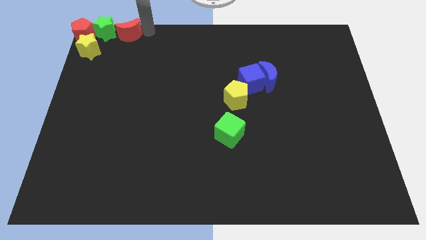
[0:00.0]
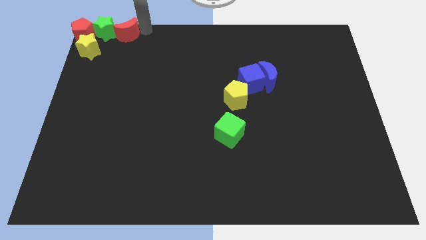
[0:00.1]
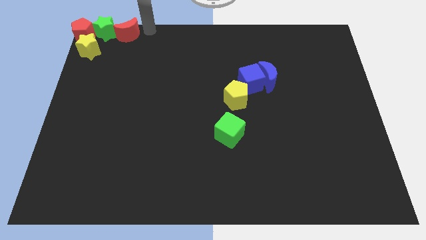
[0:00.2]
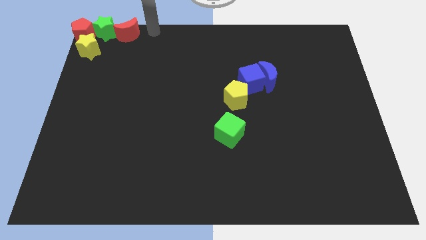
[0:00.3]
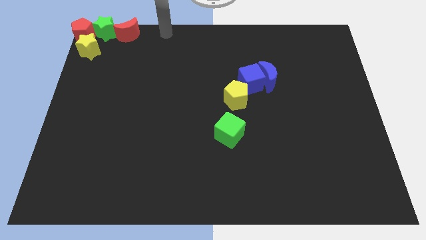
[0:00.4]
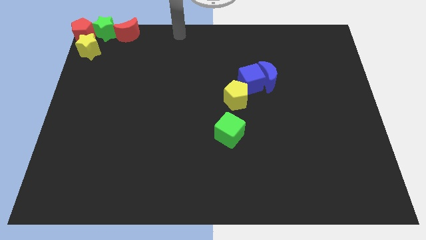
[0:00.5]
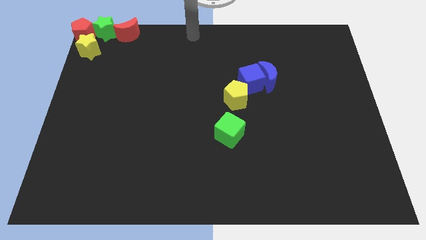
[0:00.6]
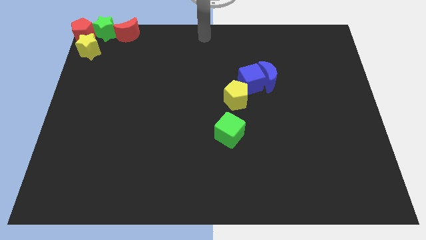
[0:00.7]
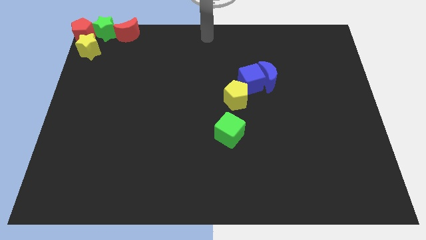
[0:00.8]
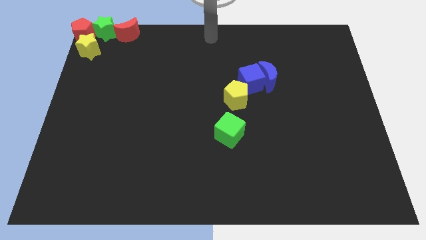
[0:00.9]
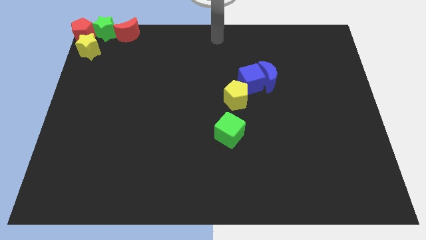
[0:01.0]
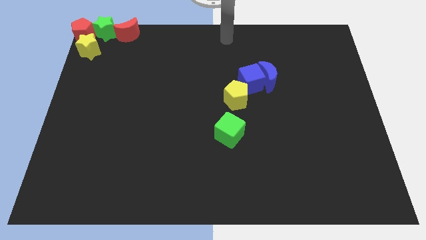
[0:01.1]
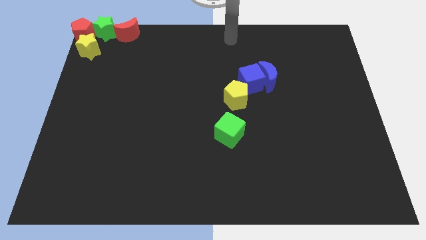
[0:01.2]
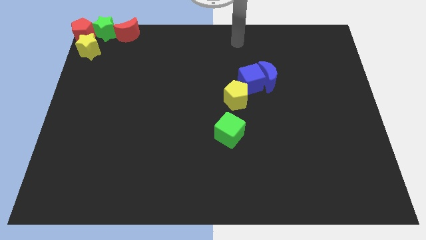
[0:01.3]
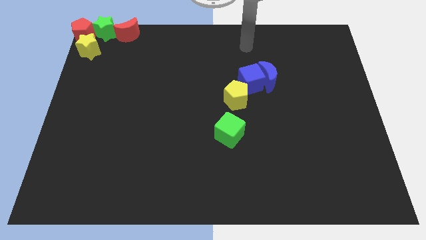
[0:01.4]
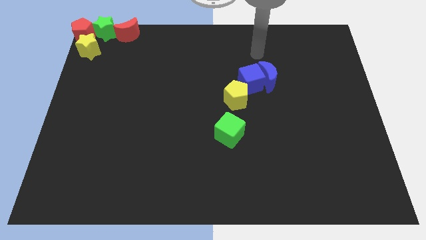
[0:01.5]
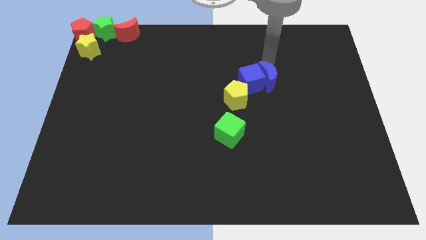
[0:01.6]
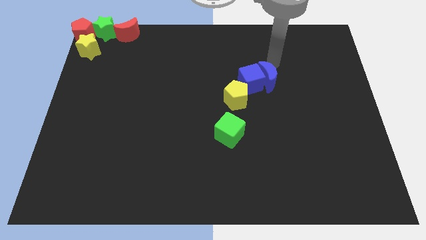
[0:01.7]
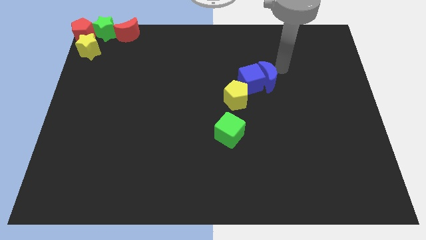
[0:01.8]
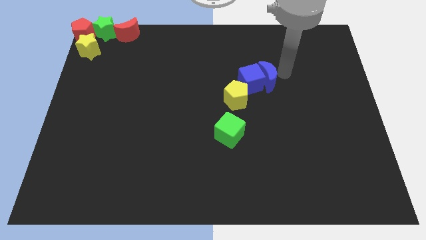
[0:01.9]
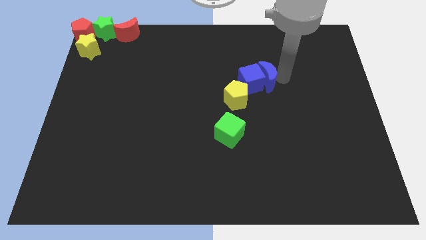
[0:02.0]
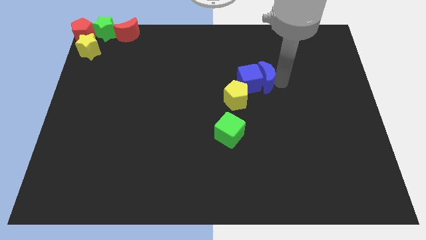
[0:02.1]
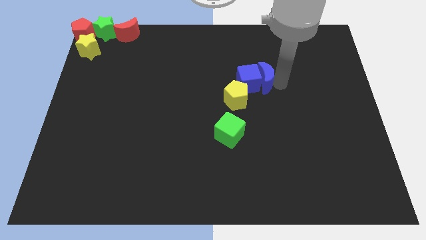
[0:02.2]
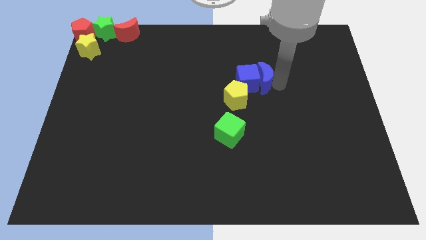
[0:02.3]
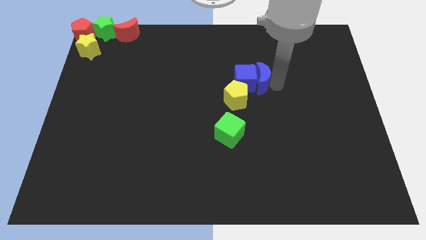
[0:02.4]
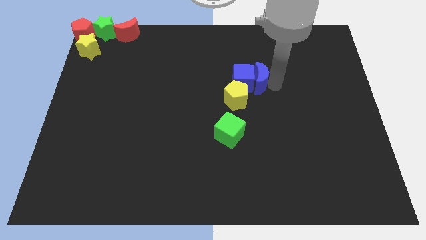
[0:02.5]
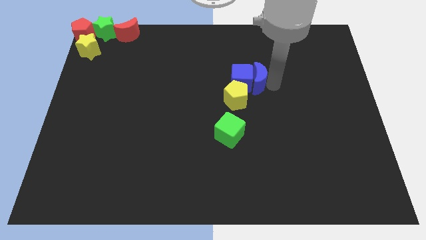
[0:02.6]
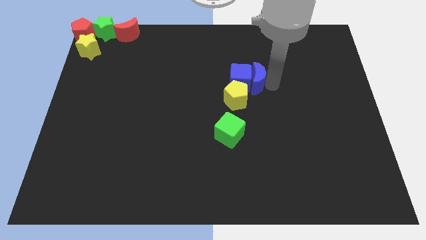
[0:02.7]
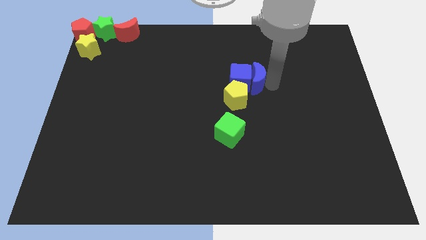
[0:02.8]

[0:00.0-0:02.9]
go near blue blocks

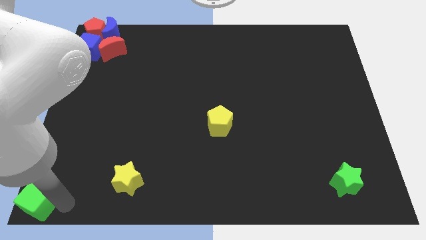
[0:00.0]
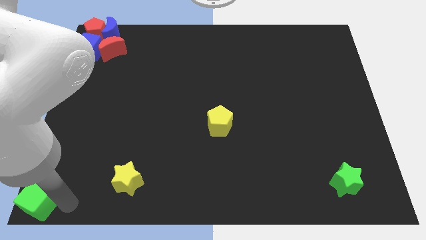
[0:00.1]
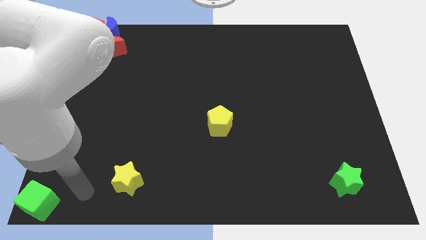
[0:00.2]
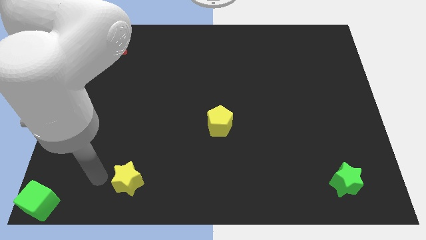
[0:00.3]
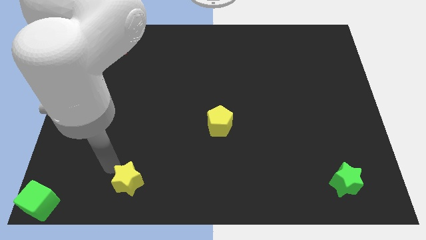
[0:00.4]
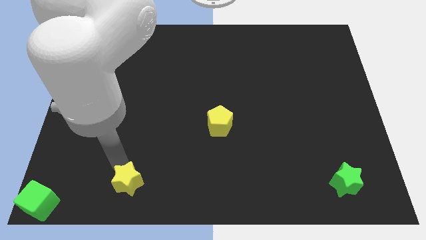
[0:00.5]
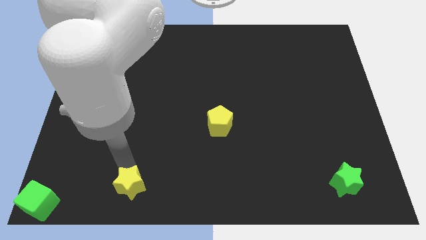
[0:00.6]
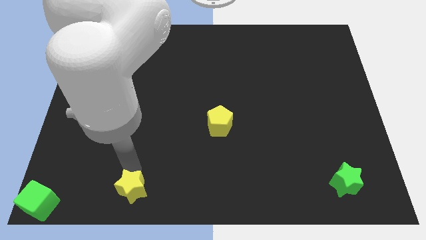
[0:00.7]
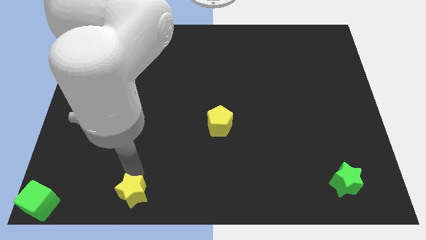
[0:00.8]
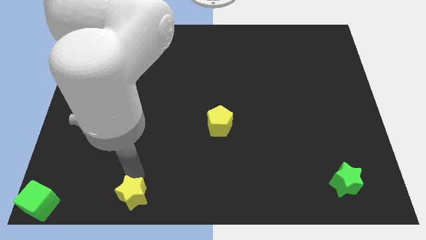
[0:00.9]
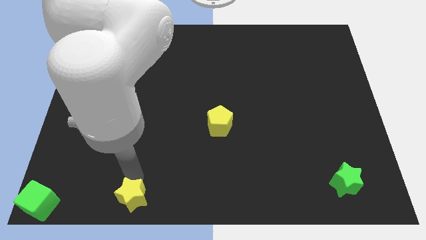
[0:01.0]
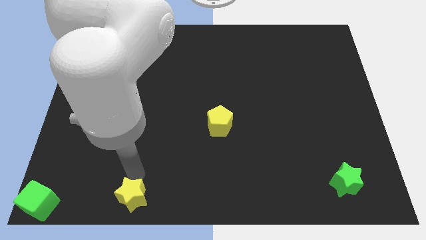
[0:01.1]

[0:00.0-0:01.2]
move your arm away from the green cube

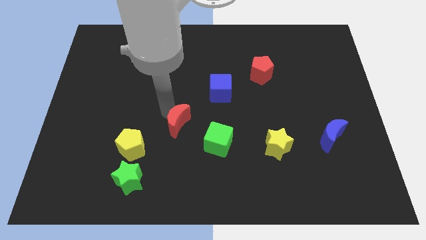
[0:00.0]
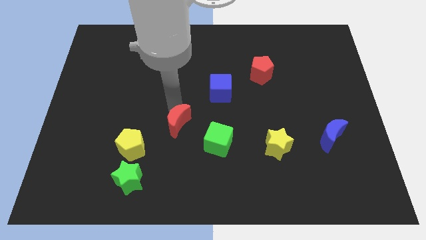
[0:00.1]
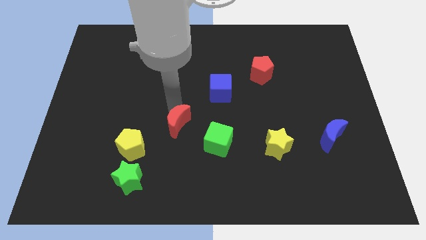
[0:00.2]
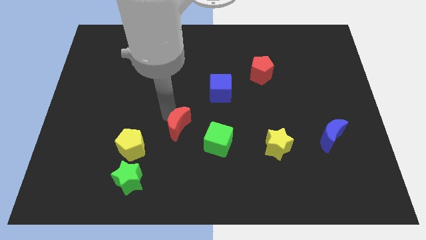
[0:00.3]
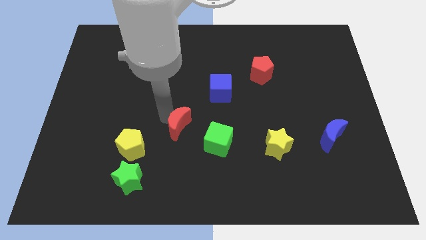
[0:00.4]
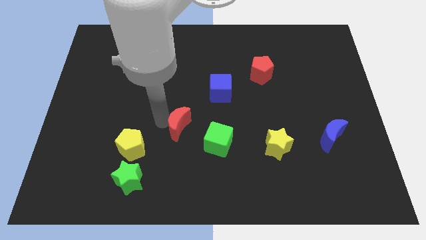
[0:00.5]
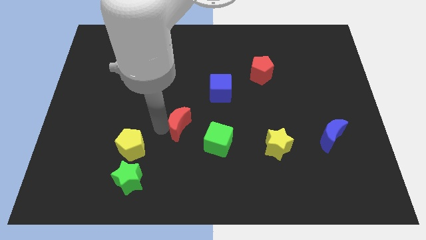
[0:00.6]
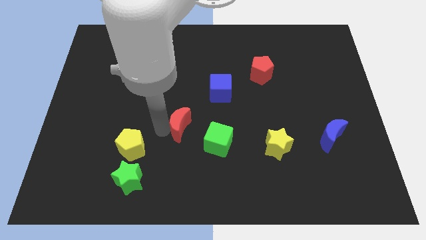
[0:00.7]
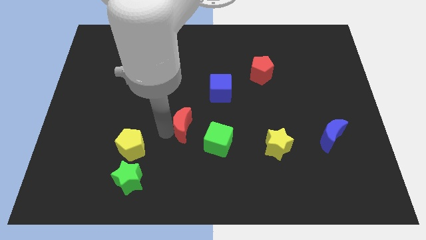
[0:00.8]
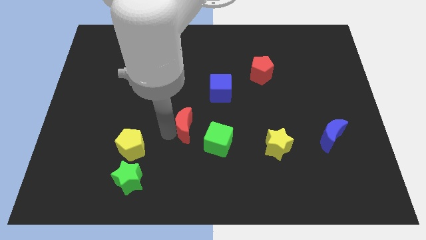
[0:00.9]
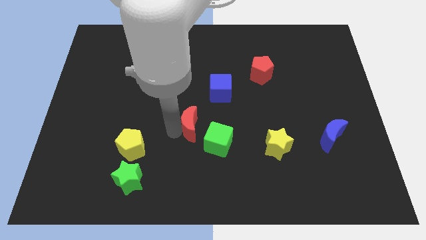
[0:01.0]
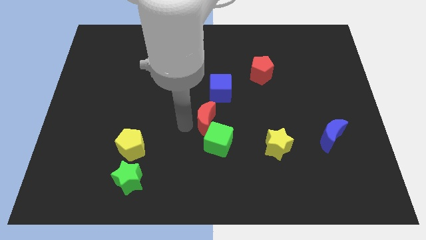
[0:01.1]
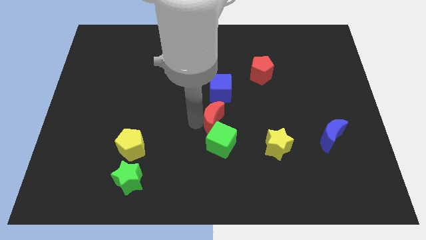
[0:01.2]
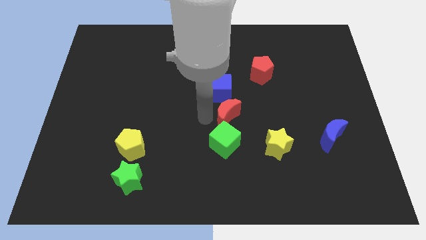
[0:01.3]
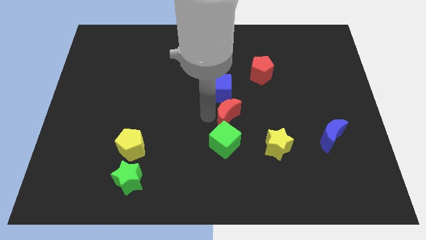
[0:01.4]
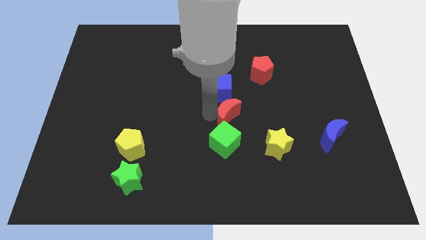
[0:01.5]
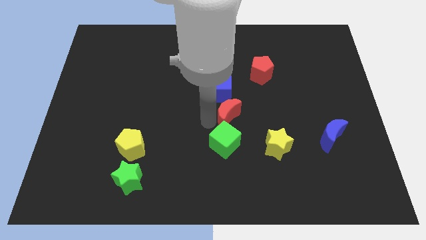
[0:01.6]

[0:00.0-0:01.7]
place the red moon vertically above the green cube

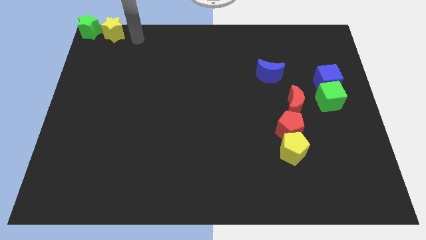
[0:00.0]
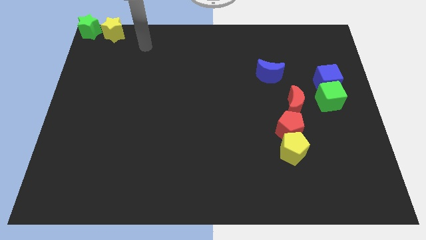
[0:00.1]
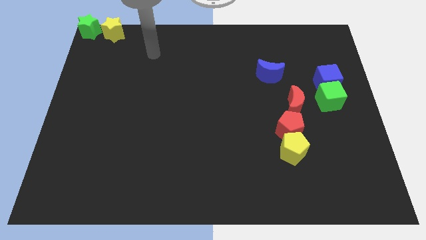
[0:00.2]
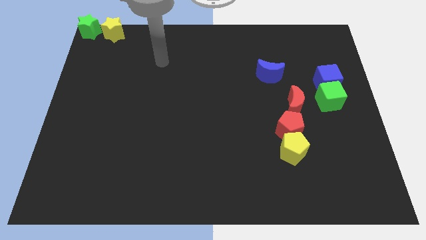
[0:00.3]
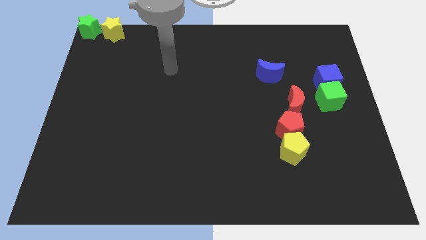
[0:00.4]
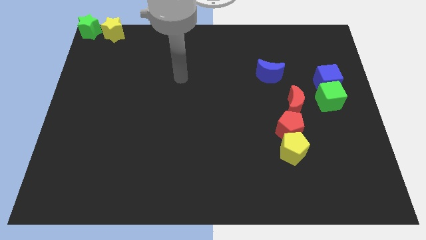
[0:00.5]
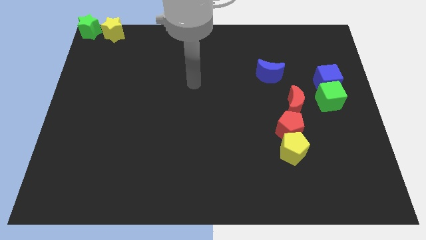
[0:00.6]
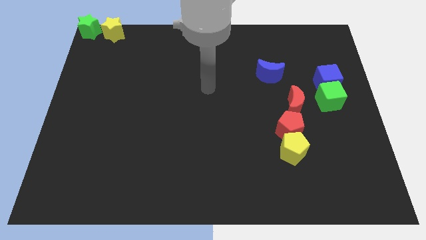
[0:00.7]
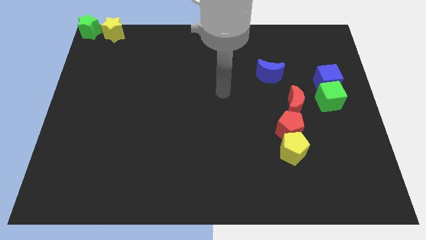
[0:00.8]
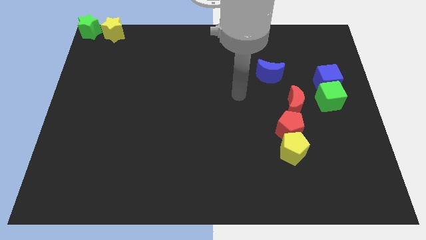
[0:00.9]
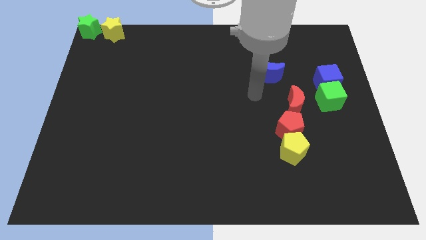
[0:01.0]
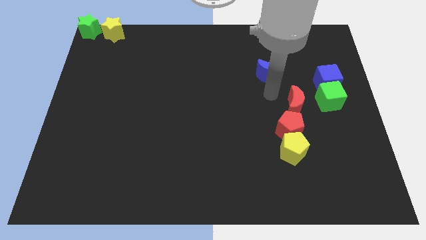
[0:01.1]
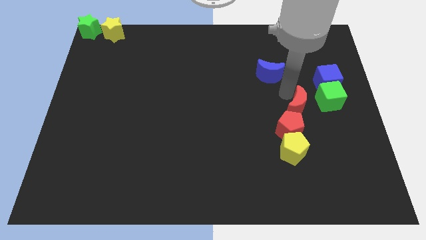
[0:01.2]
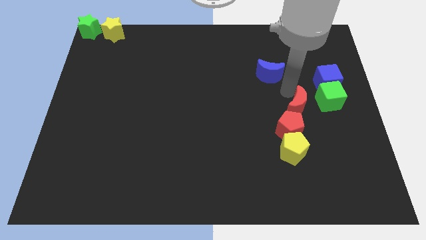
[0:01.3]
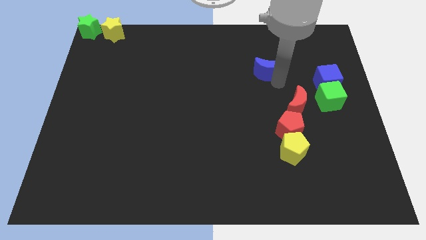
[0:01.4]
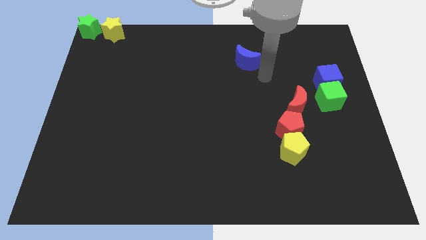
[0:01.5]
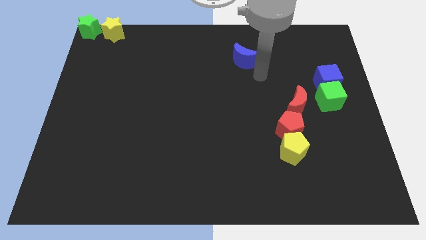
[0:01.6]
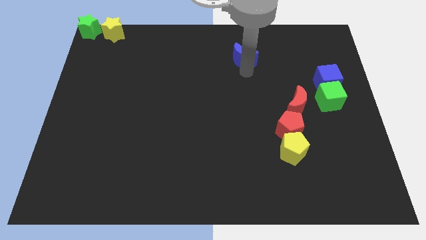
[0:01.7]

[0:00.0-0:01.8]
slide the blue moon away from the red moon

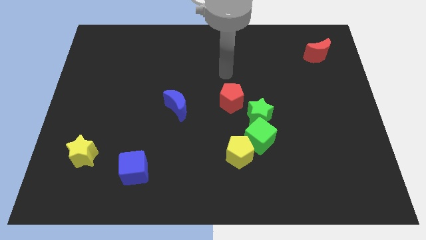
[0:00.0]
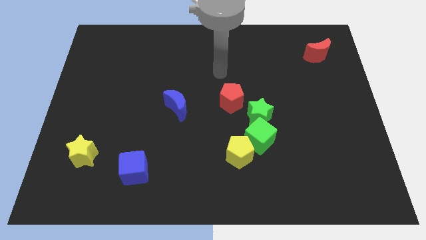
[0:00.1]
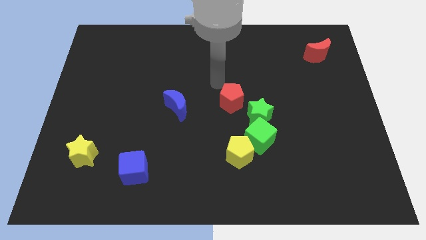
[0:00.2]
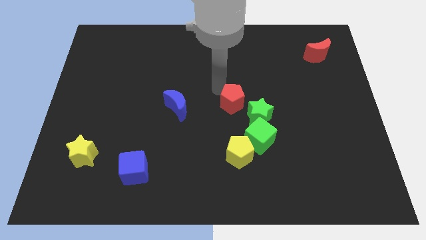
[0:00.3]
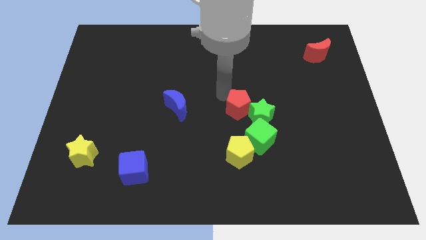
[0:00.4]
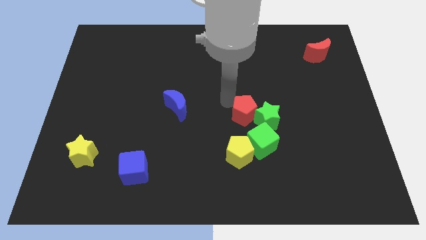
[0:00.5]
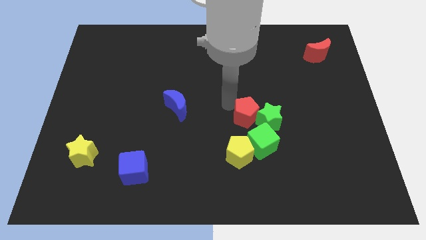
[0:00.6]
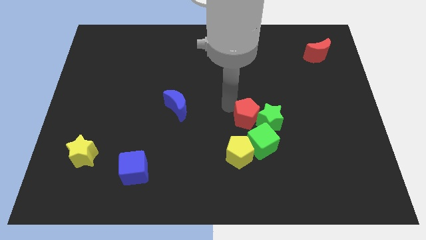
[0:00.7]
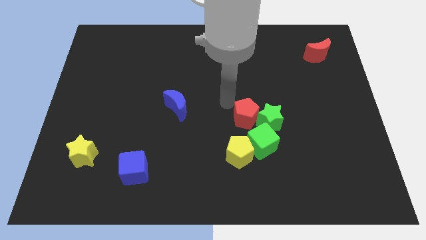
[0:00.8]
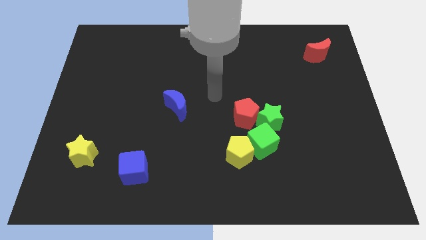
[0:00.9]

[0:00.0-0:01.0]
move the red pentagon towards the green blocks

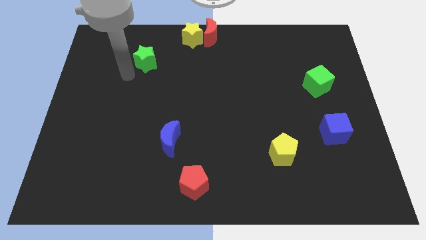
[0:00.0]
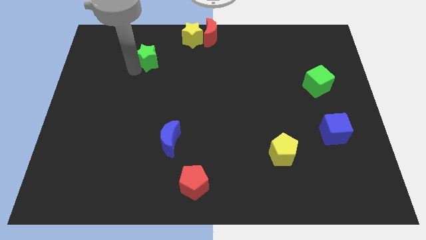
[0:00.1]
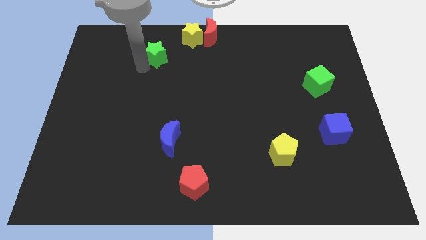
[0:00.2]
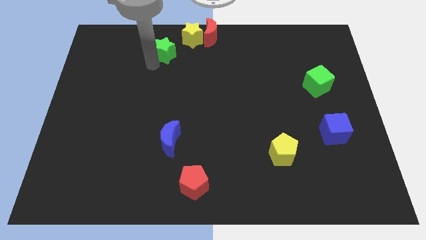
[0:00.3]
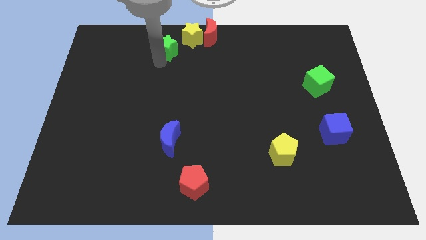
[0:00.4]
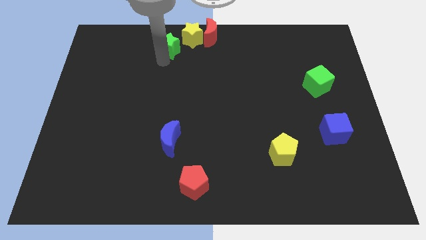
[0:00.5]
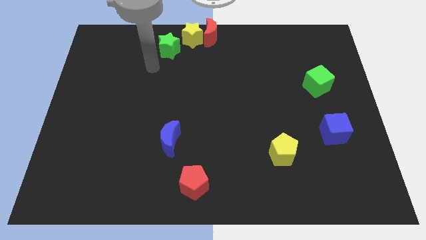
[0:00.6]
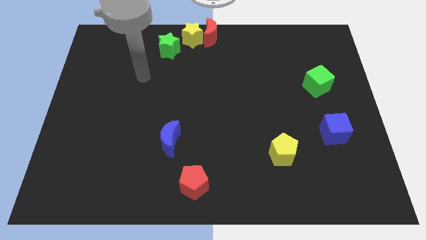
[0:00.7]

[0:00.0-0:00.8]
move the green star to the bottom left of the yellow star
